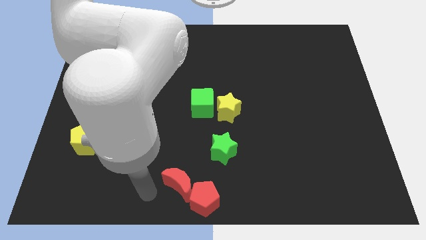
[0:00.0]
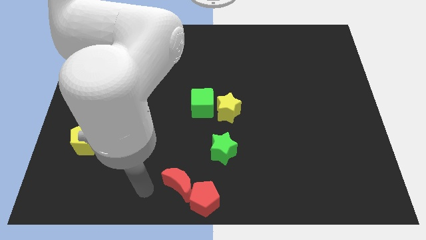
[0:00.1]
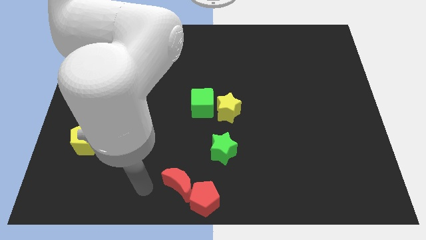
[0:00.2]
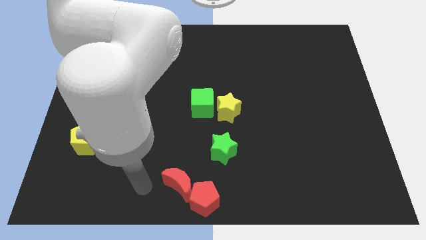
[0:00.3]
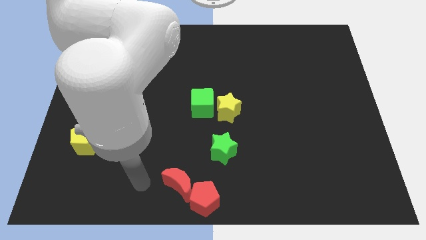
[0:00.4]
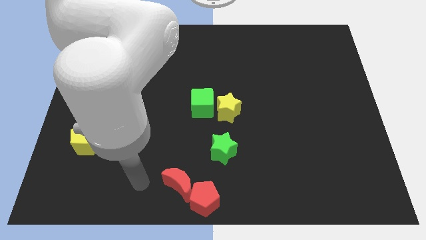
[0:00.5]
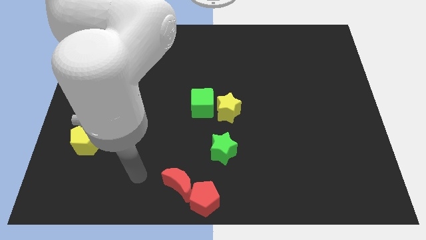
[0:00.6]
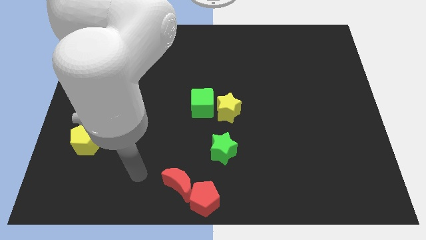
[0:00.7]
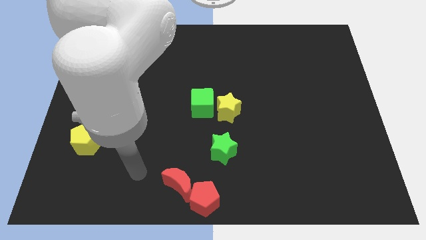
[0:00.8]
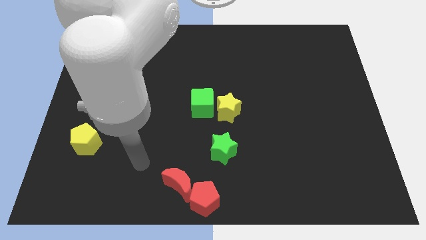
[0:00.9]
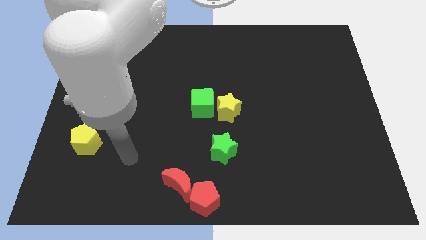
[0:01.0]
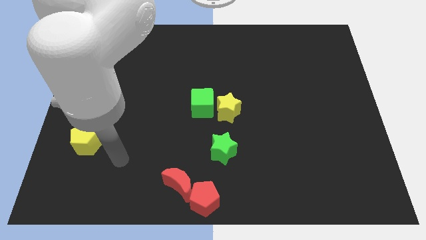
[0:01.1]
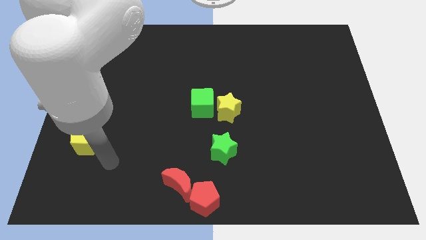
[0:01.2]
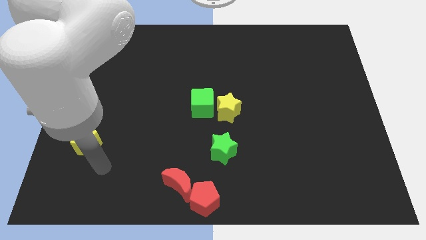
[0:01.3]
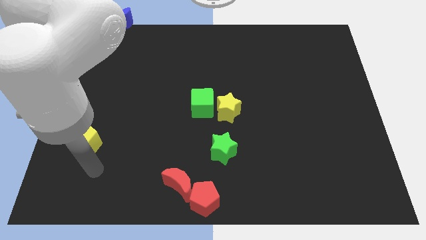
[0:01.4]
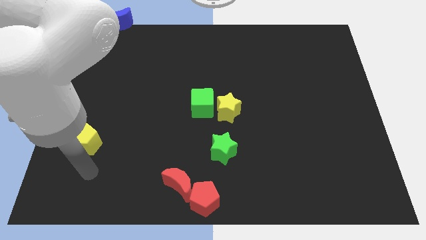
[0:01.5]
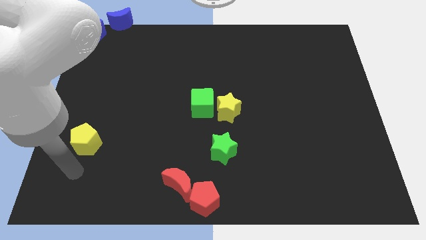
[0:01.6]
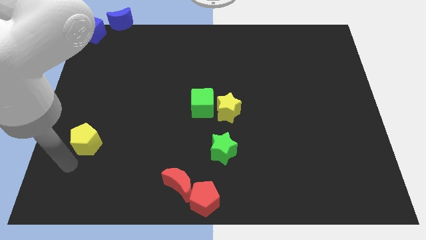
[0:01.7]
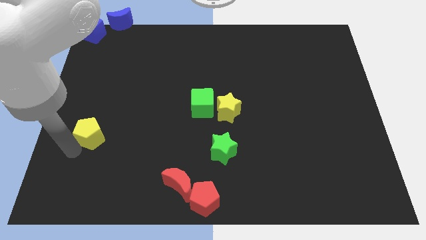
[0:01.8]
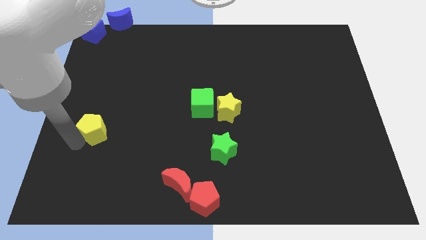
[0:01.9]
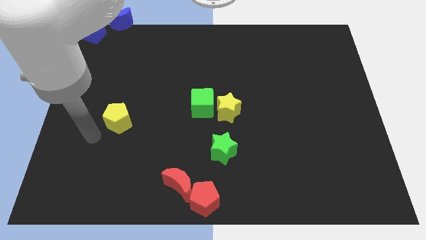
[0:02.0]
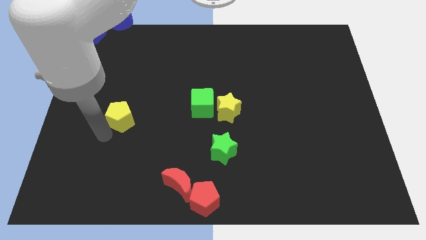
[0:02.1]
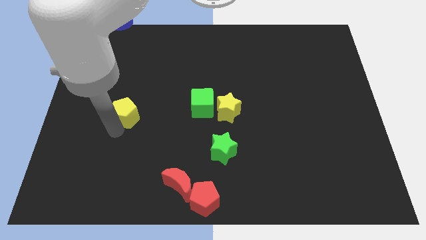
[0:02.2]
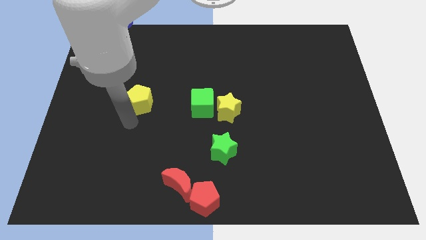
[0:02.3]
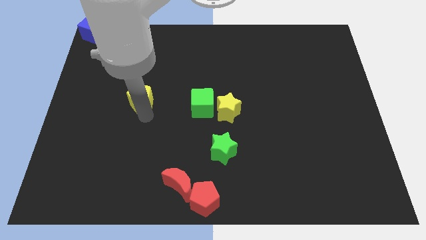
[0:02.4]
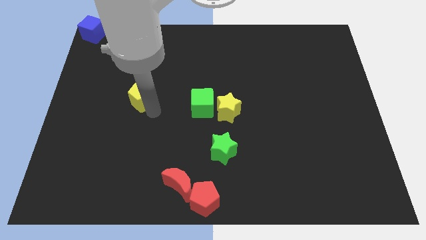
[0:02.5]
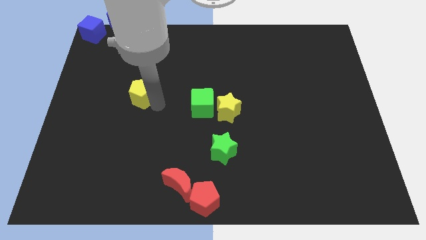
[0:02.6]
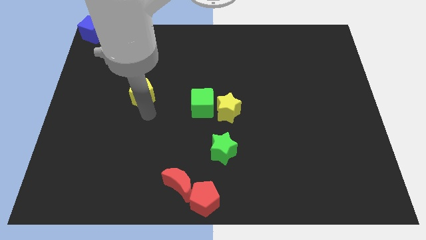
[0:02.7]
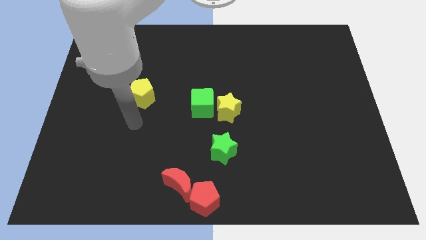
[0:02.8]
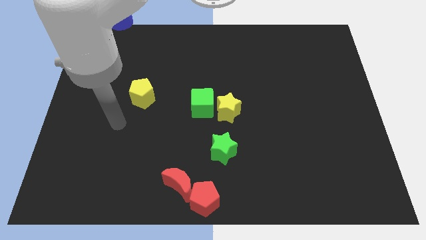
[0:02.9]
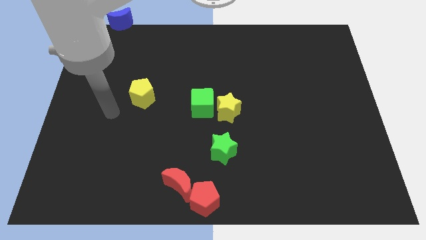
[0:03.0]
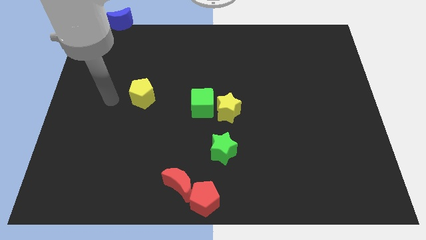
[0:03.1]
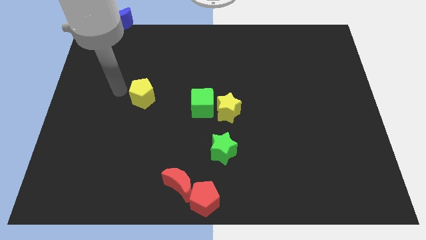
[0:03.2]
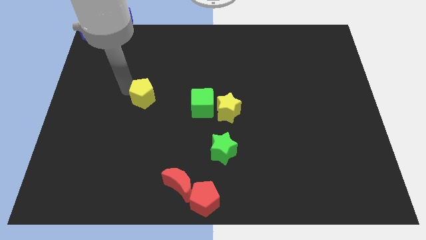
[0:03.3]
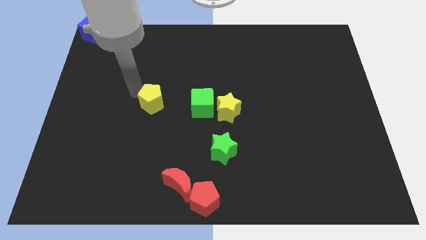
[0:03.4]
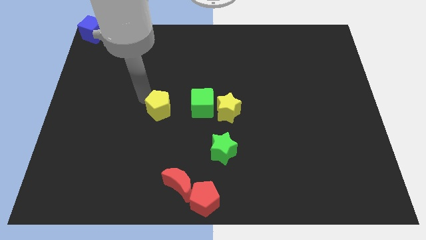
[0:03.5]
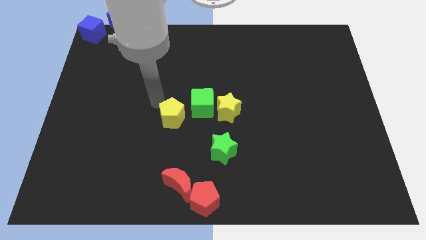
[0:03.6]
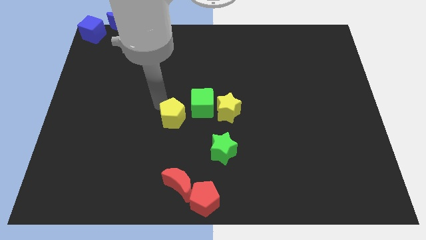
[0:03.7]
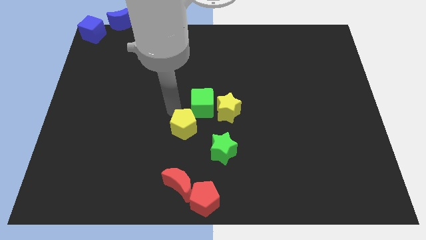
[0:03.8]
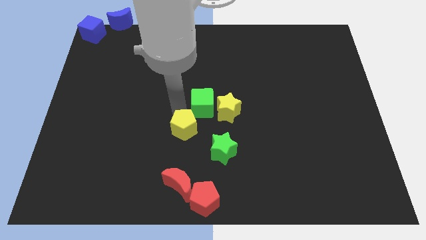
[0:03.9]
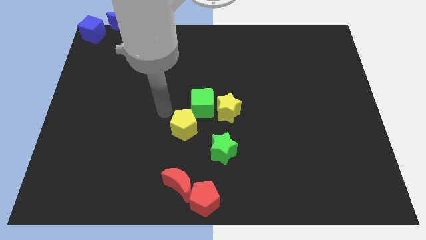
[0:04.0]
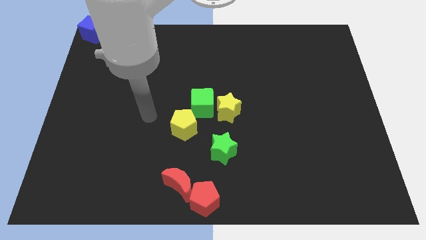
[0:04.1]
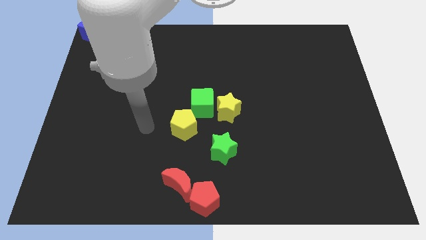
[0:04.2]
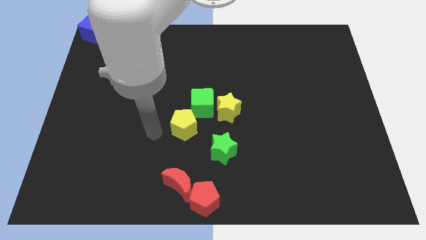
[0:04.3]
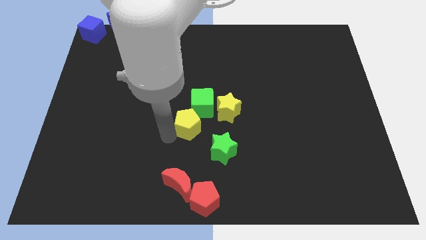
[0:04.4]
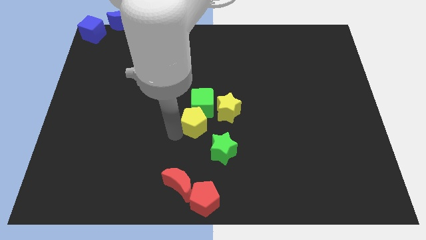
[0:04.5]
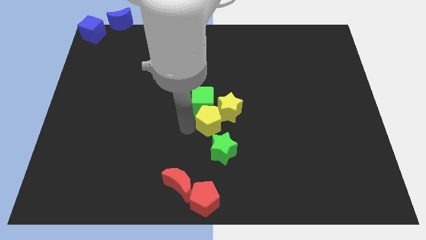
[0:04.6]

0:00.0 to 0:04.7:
put the yellow pentagon below the green cube

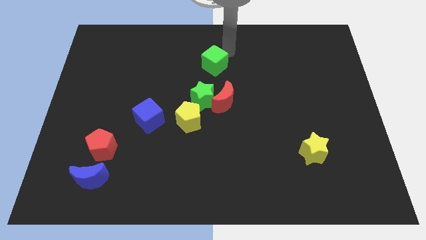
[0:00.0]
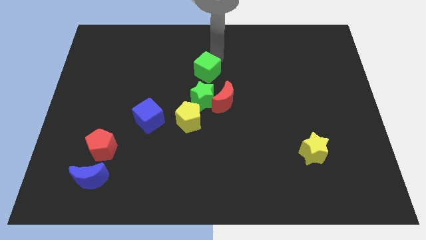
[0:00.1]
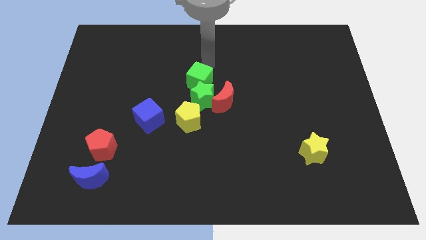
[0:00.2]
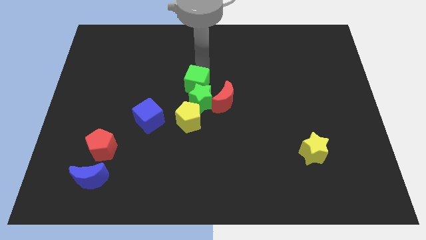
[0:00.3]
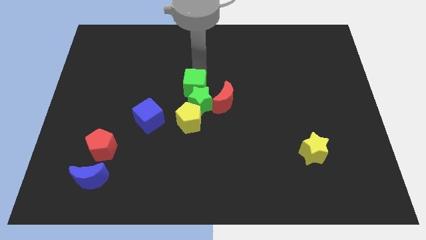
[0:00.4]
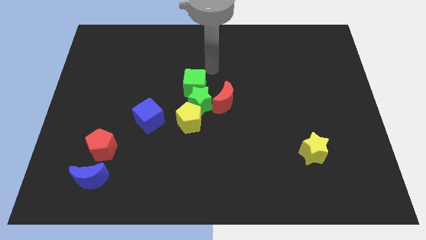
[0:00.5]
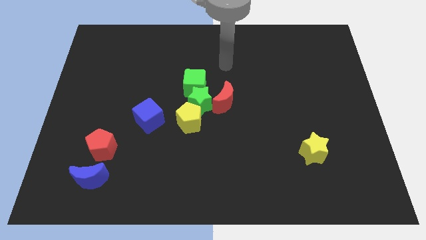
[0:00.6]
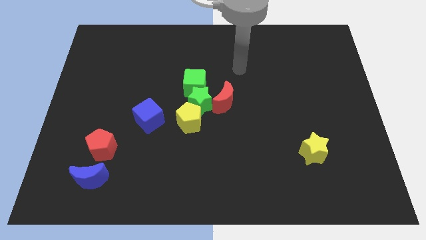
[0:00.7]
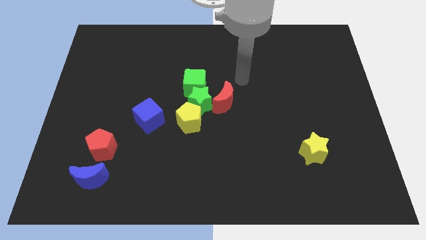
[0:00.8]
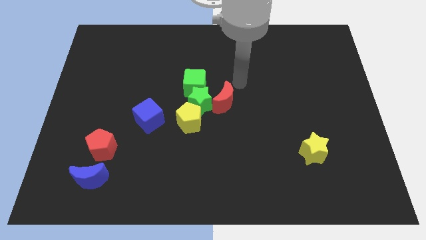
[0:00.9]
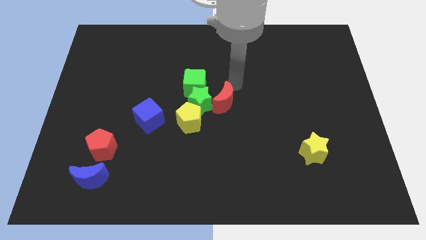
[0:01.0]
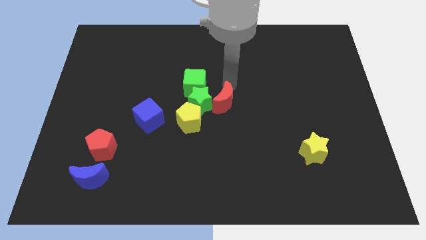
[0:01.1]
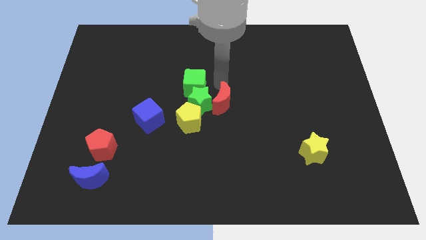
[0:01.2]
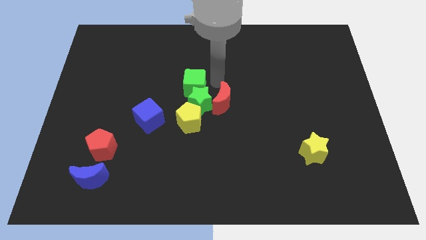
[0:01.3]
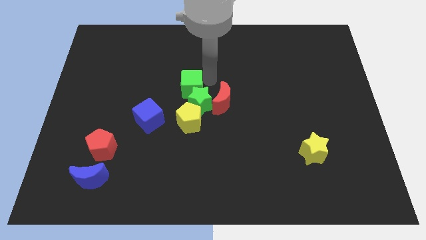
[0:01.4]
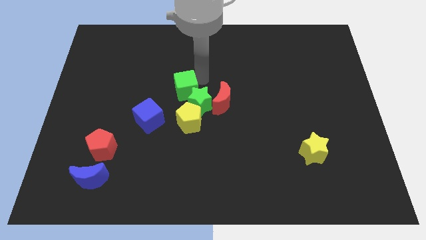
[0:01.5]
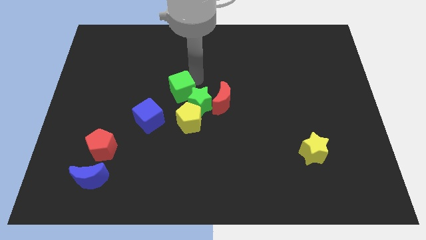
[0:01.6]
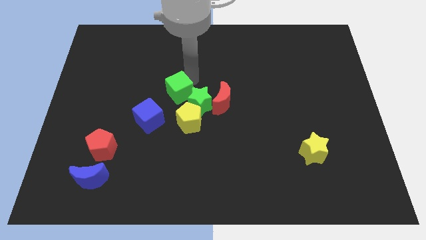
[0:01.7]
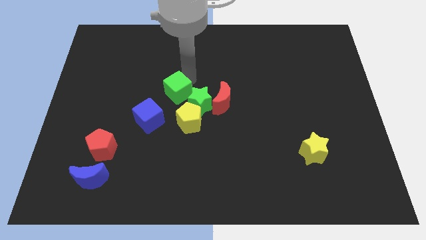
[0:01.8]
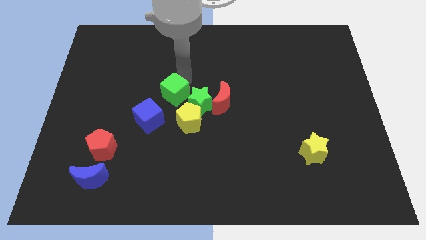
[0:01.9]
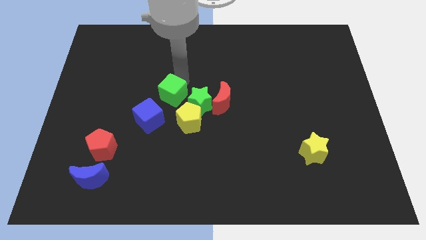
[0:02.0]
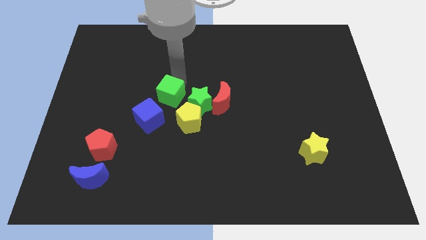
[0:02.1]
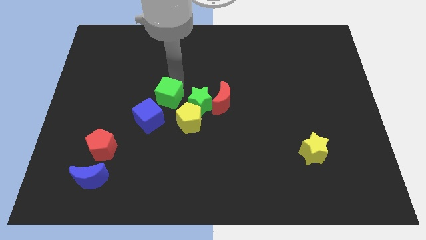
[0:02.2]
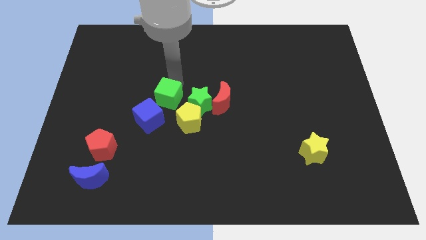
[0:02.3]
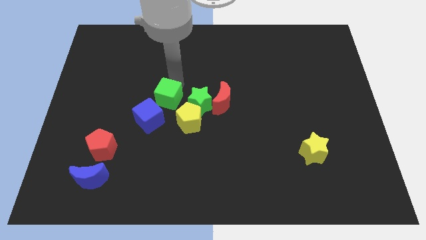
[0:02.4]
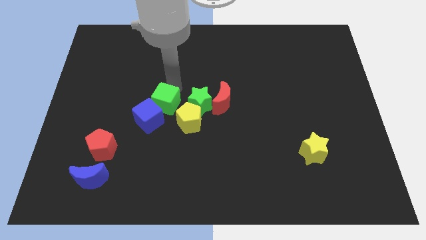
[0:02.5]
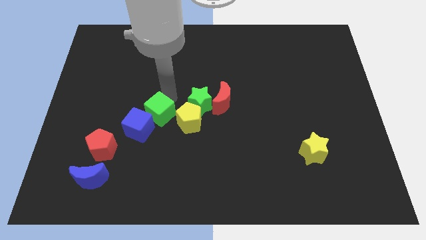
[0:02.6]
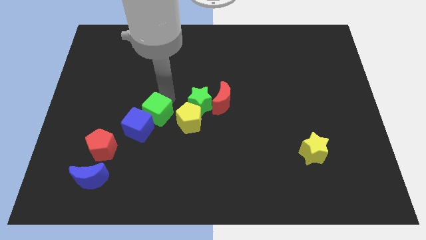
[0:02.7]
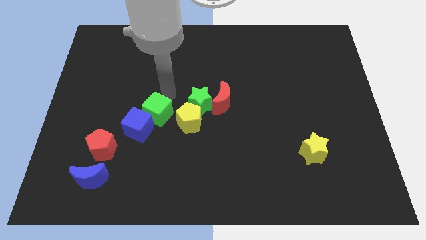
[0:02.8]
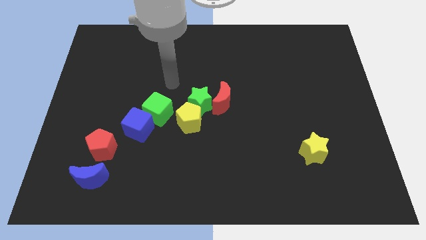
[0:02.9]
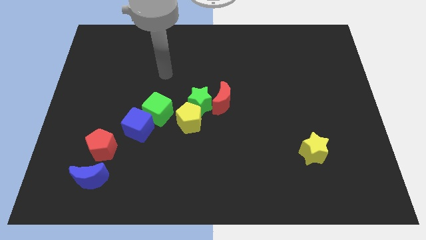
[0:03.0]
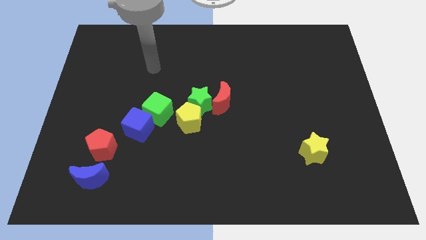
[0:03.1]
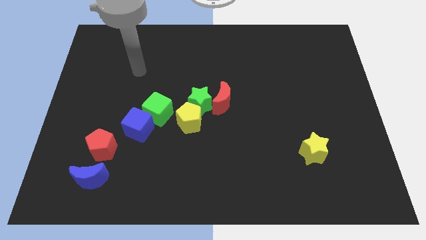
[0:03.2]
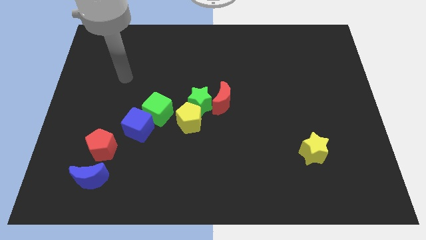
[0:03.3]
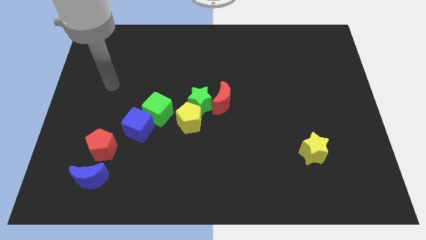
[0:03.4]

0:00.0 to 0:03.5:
push the green cube into the blue cube

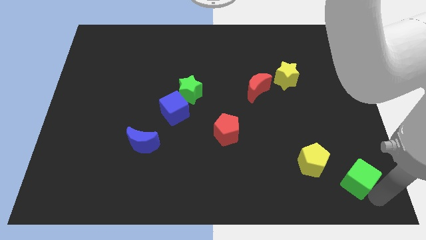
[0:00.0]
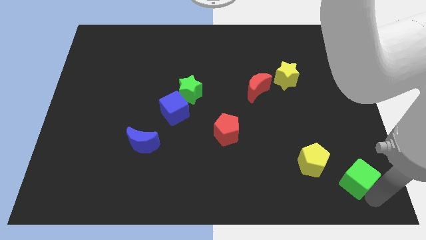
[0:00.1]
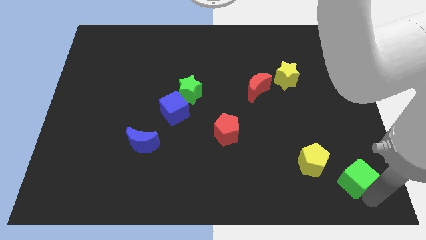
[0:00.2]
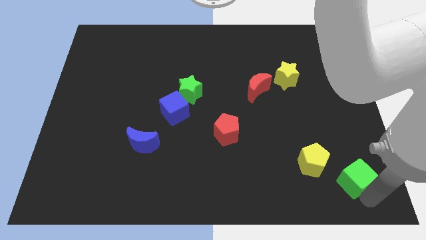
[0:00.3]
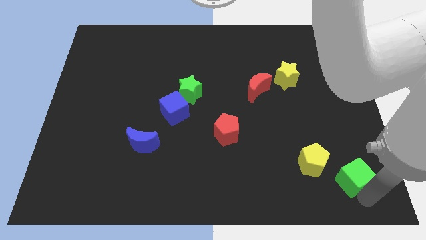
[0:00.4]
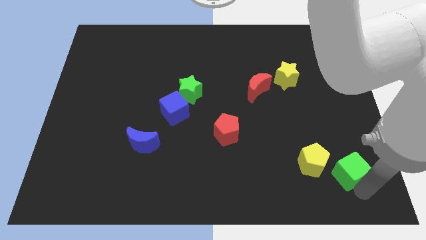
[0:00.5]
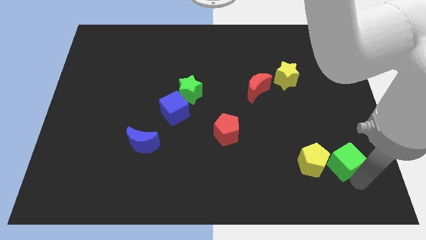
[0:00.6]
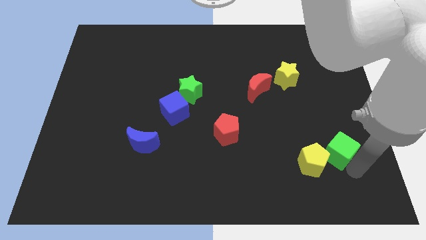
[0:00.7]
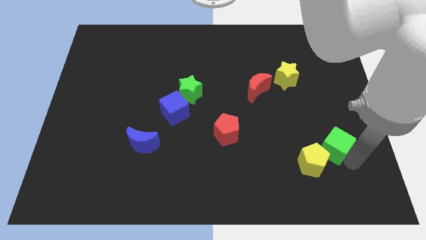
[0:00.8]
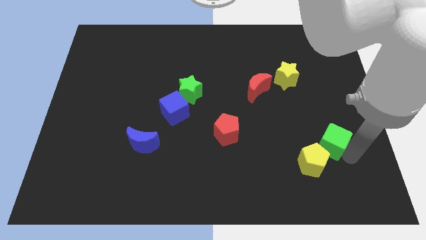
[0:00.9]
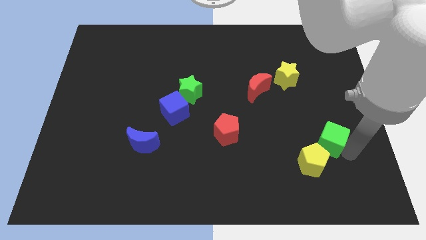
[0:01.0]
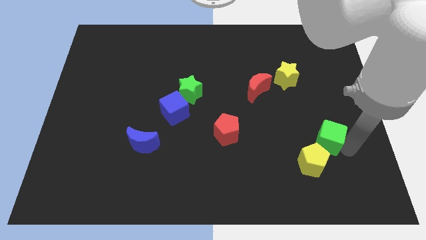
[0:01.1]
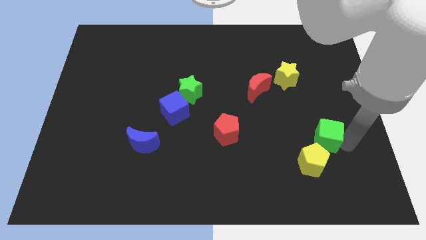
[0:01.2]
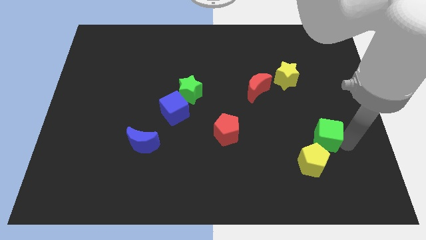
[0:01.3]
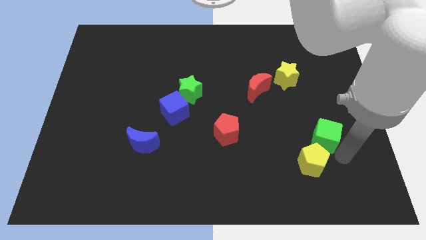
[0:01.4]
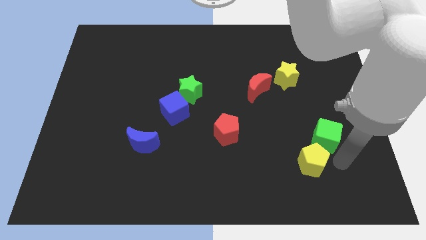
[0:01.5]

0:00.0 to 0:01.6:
push the green cube slightly towards top left
